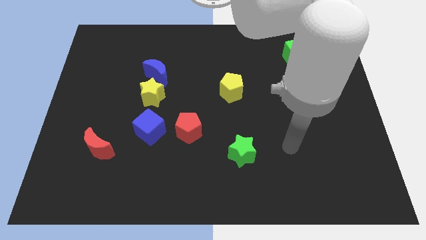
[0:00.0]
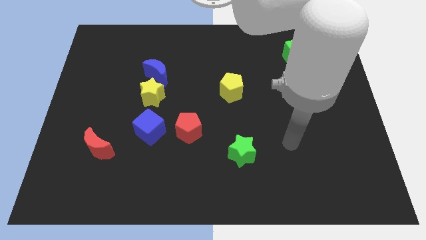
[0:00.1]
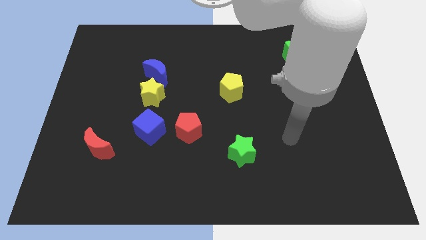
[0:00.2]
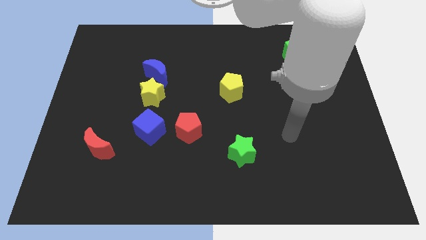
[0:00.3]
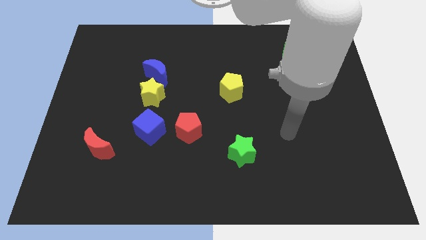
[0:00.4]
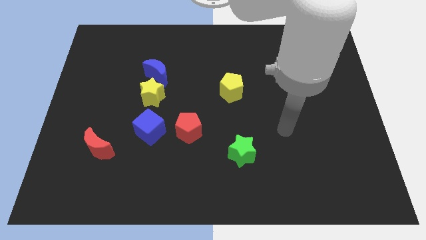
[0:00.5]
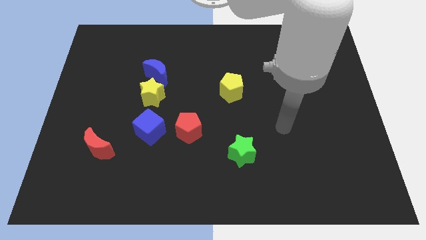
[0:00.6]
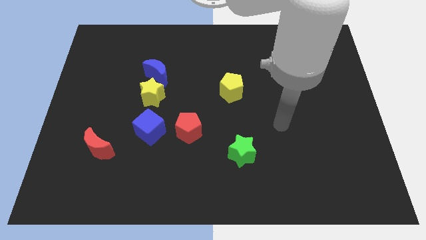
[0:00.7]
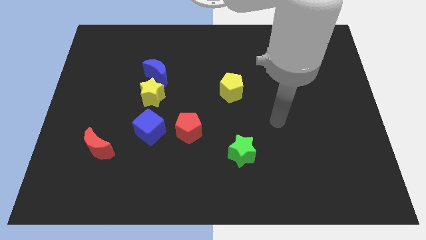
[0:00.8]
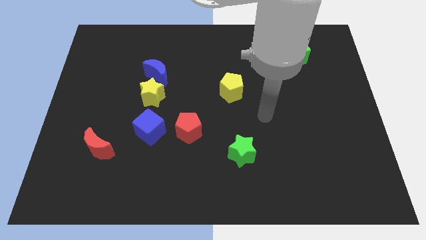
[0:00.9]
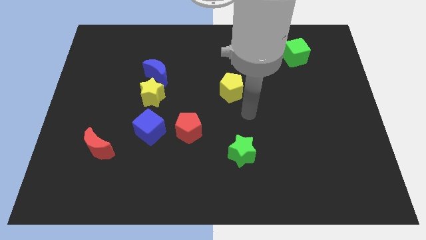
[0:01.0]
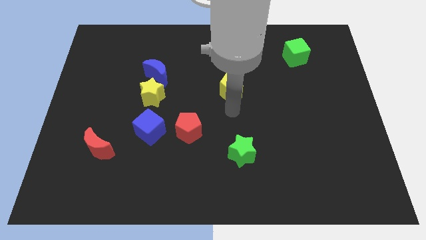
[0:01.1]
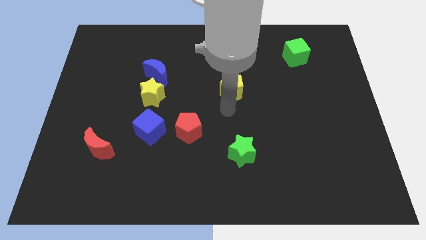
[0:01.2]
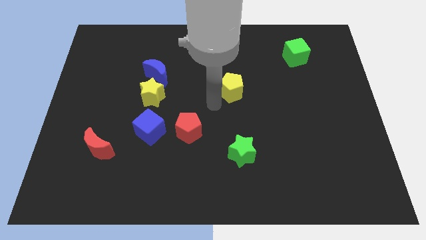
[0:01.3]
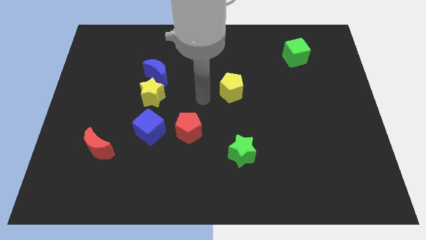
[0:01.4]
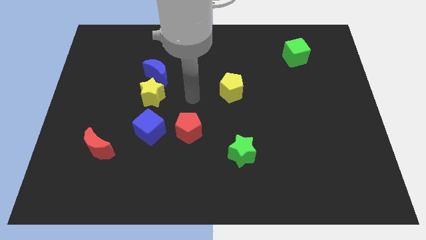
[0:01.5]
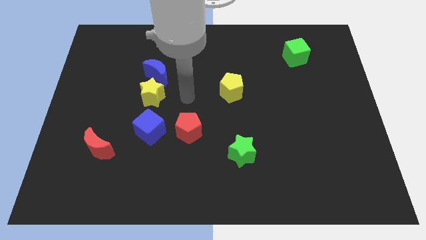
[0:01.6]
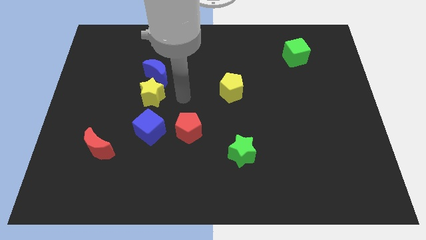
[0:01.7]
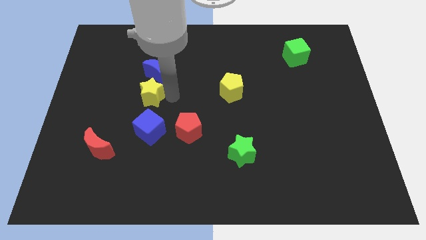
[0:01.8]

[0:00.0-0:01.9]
move the arm to the right of the yellow star

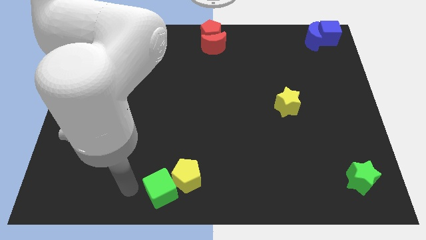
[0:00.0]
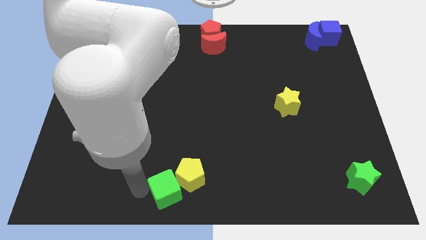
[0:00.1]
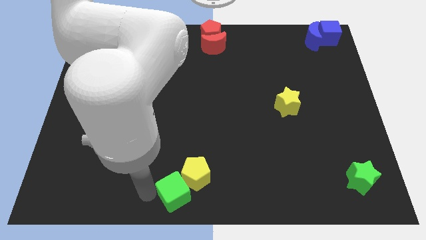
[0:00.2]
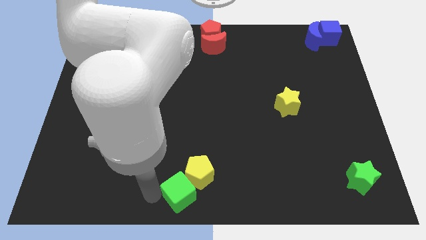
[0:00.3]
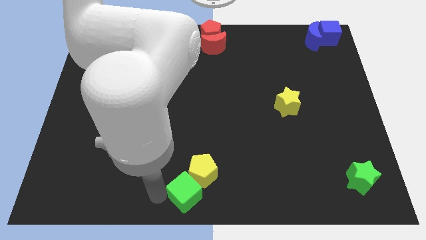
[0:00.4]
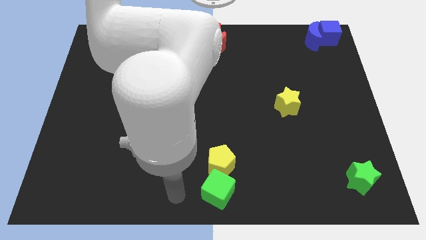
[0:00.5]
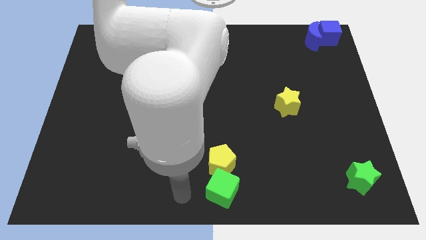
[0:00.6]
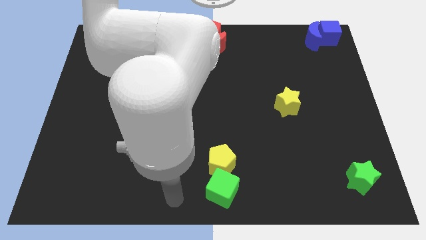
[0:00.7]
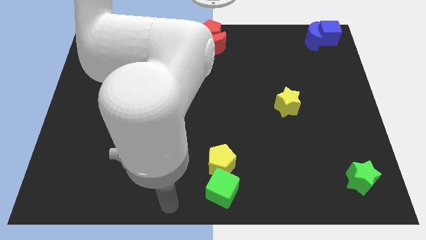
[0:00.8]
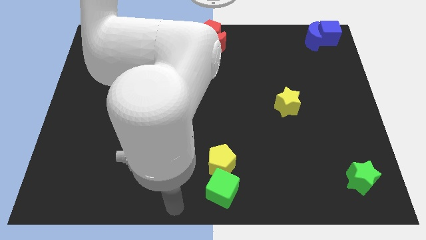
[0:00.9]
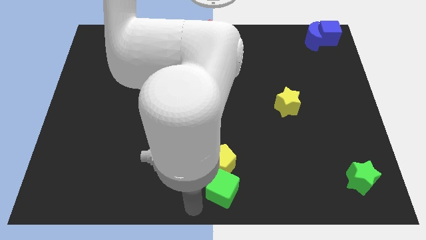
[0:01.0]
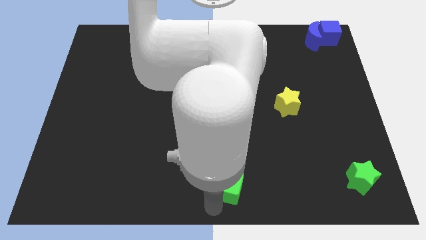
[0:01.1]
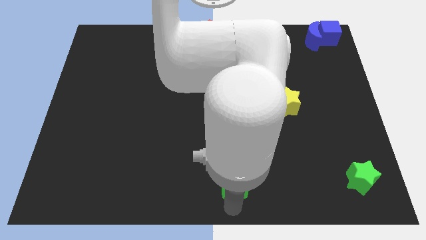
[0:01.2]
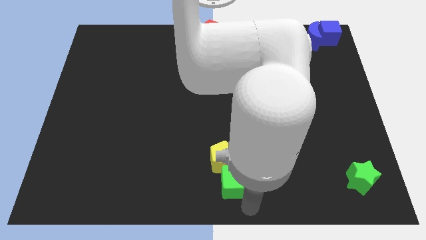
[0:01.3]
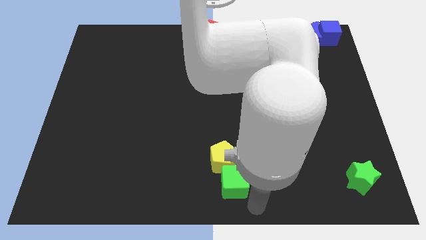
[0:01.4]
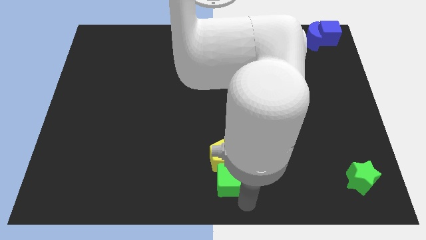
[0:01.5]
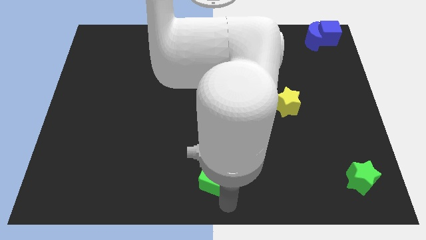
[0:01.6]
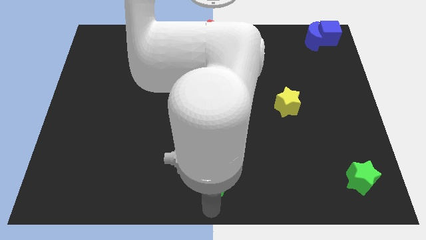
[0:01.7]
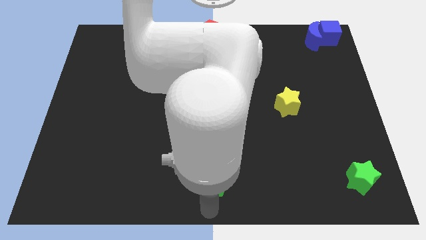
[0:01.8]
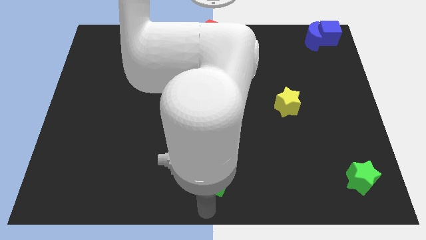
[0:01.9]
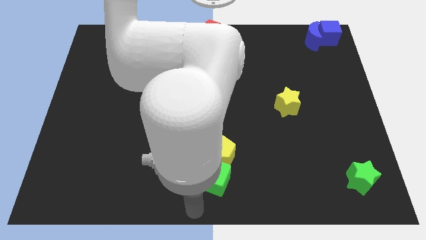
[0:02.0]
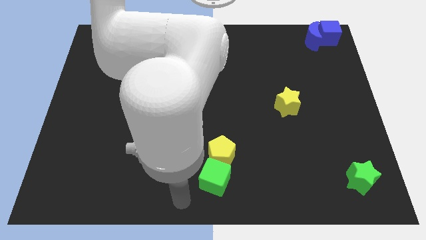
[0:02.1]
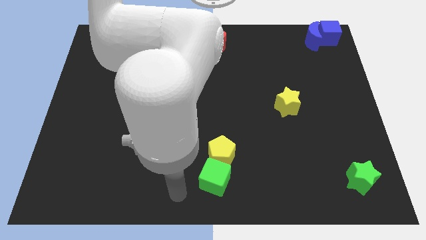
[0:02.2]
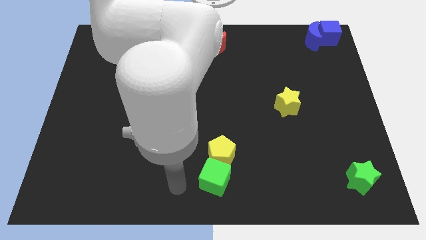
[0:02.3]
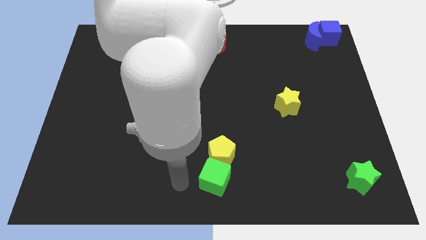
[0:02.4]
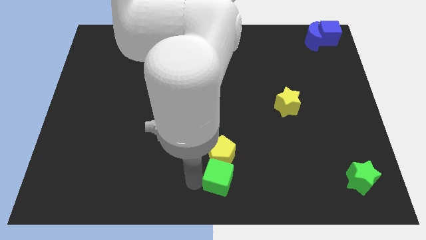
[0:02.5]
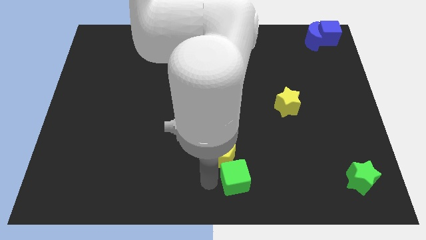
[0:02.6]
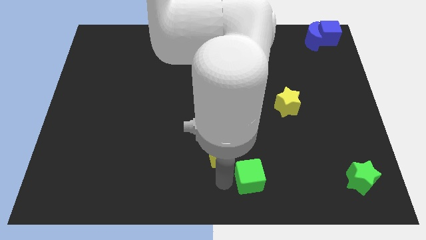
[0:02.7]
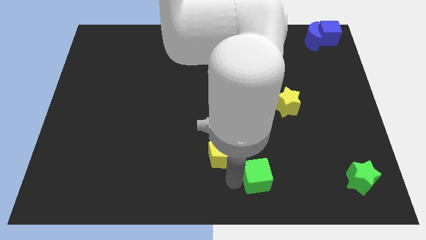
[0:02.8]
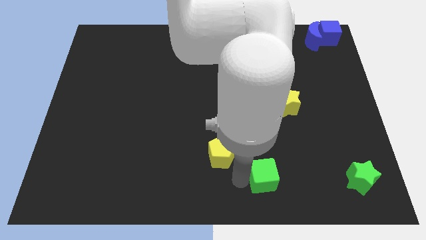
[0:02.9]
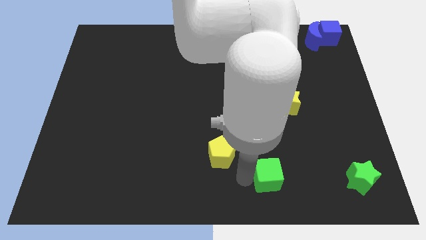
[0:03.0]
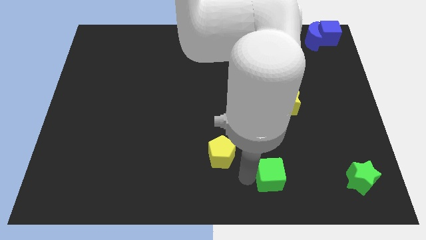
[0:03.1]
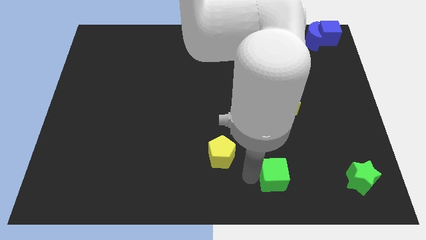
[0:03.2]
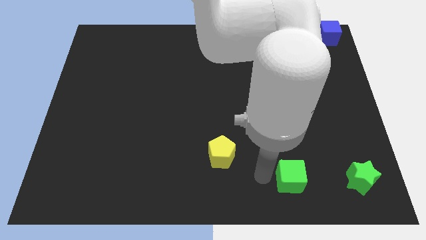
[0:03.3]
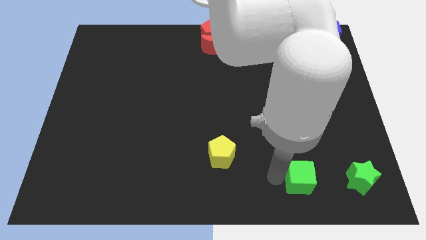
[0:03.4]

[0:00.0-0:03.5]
separate the yellow pentagon and green cube

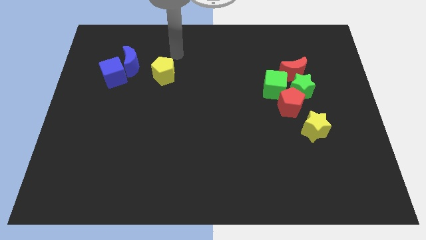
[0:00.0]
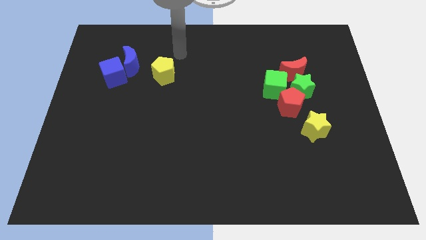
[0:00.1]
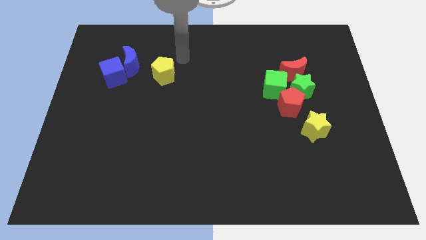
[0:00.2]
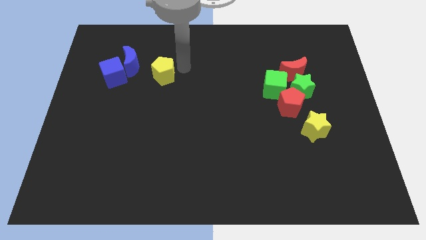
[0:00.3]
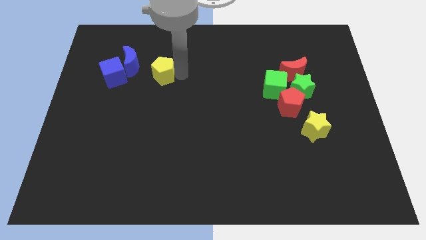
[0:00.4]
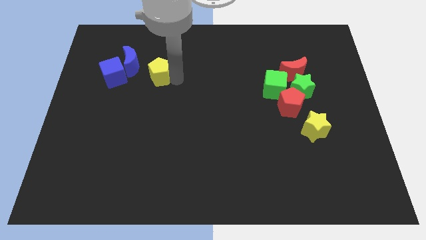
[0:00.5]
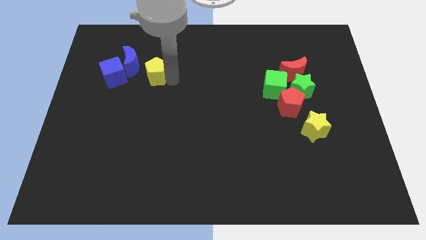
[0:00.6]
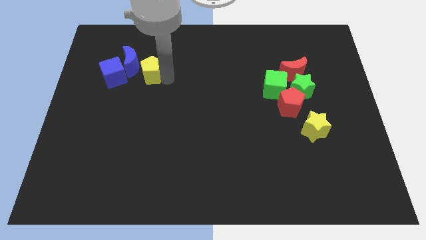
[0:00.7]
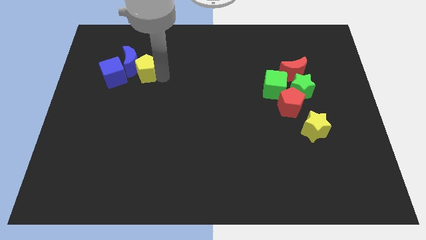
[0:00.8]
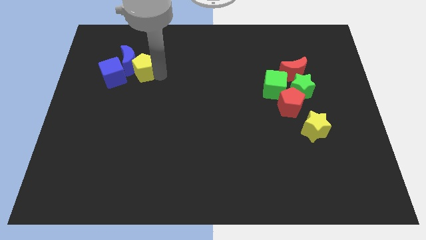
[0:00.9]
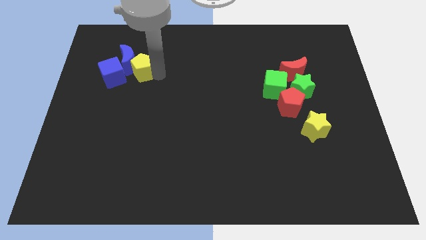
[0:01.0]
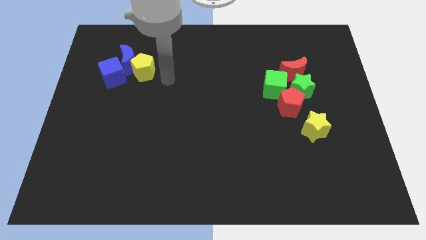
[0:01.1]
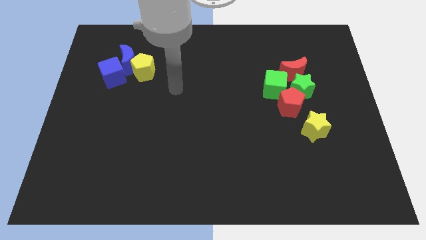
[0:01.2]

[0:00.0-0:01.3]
make the yellow pentagon touch the right side of the blue crescent

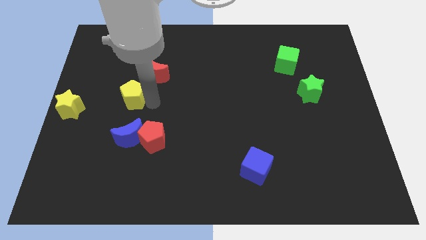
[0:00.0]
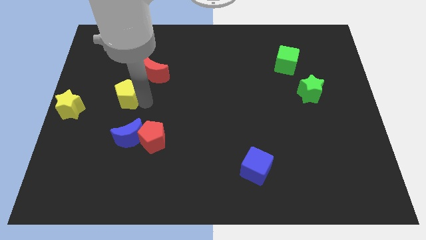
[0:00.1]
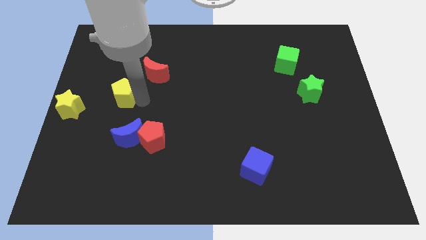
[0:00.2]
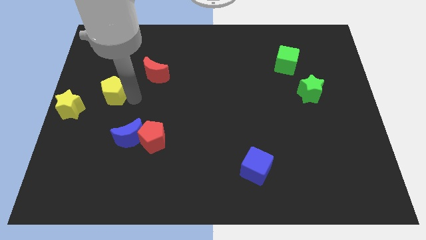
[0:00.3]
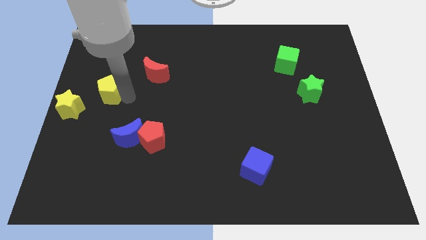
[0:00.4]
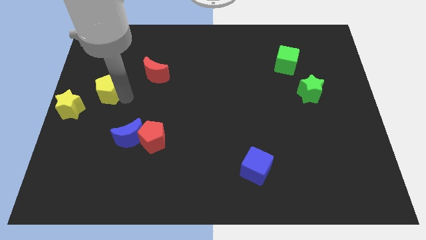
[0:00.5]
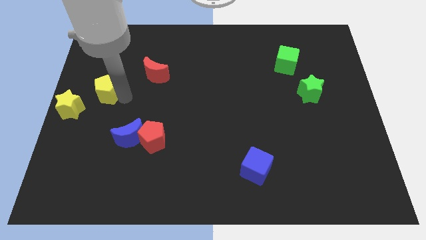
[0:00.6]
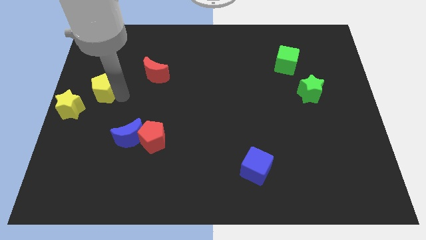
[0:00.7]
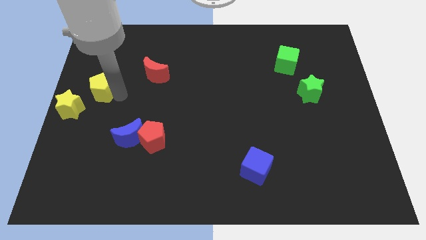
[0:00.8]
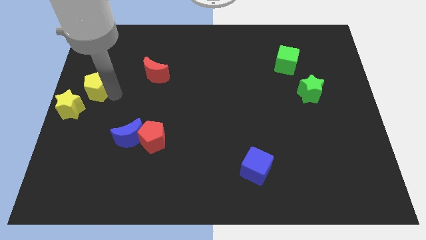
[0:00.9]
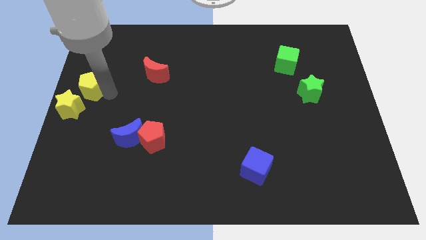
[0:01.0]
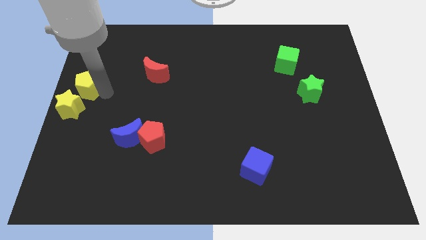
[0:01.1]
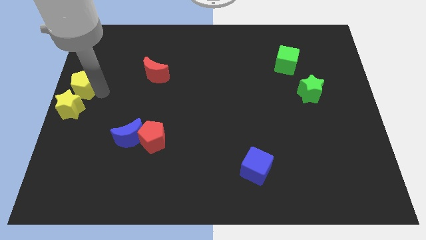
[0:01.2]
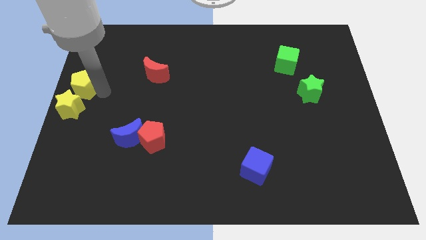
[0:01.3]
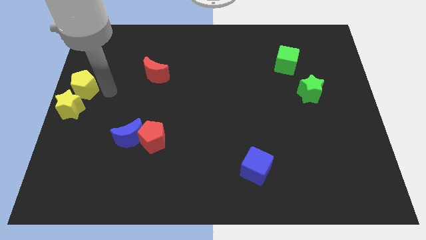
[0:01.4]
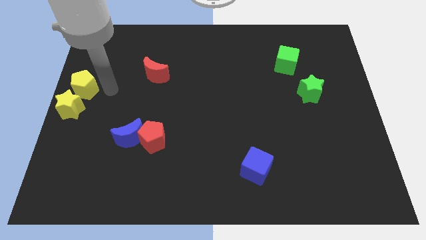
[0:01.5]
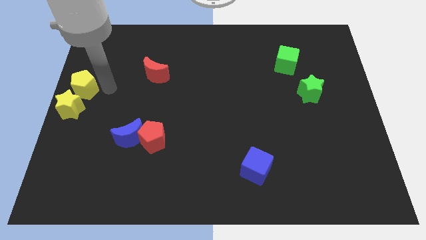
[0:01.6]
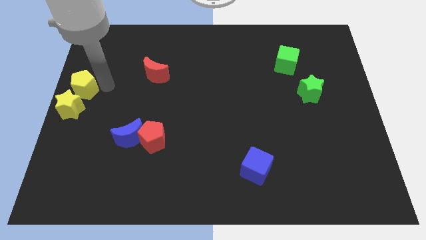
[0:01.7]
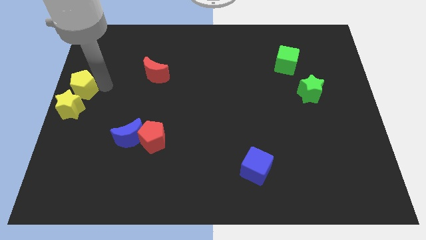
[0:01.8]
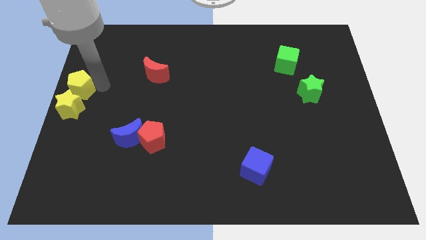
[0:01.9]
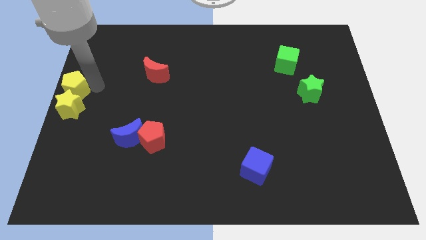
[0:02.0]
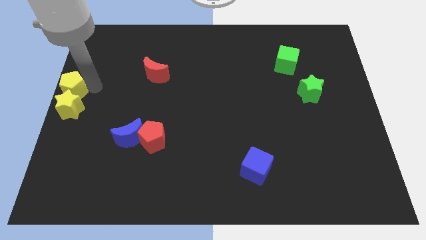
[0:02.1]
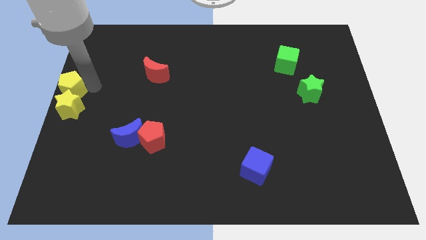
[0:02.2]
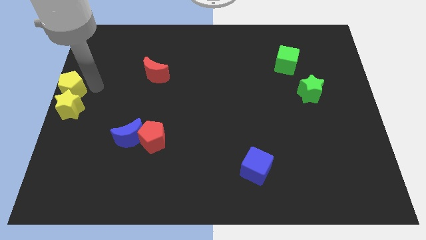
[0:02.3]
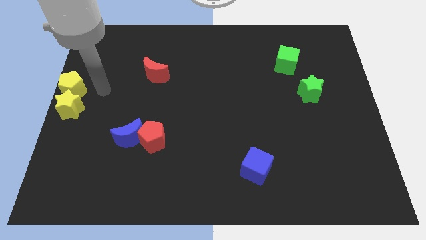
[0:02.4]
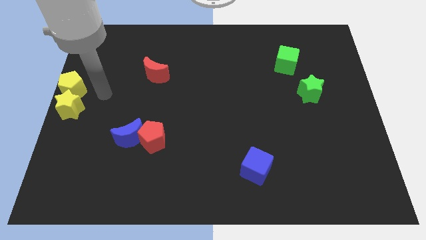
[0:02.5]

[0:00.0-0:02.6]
place the yellow pentagon at the top of the yellow star
